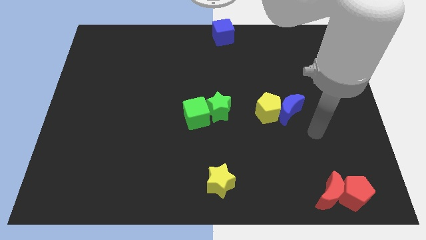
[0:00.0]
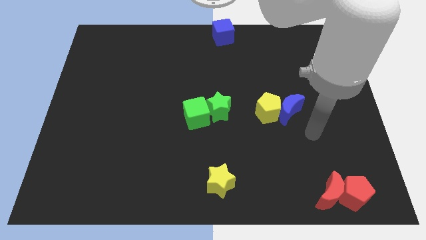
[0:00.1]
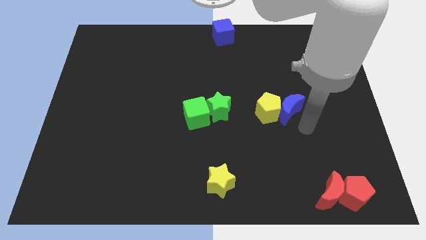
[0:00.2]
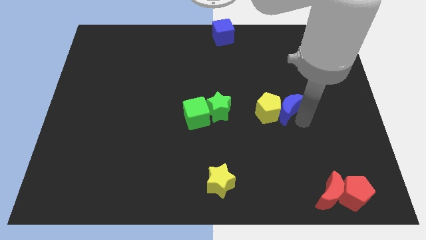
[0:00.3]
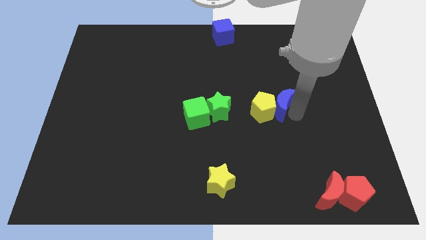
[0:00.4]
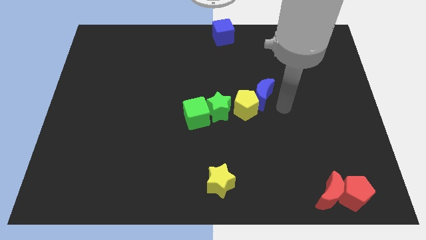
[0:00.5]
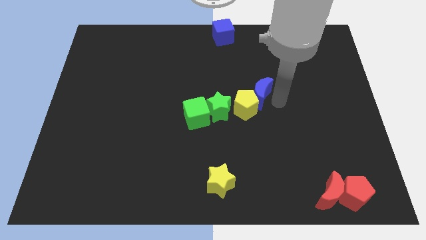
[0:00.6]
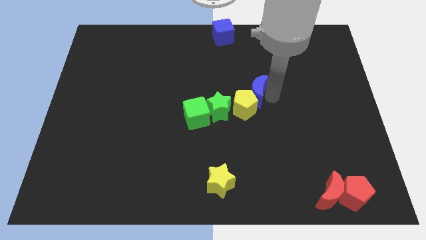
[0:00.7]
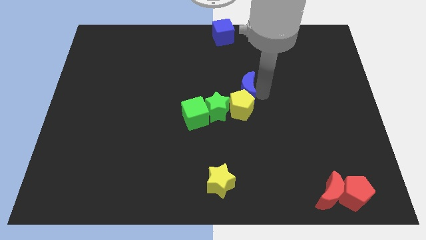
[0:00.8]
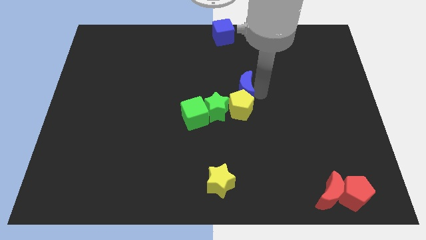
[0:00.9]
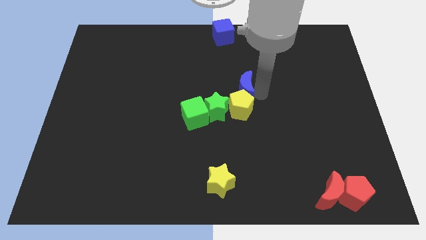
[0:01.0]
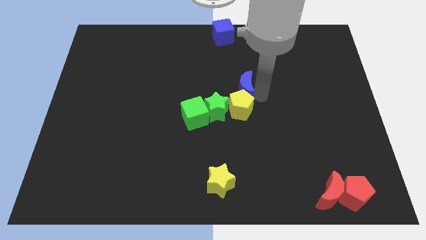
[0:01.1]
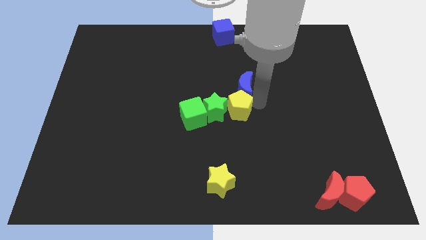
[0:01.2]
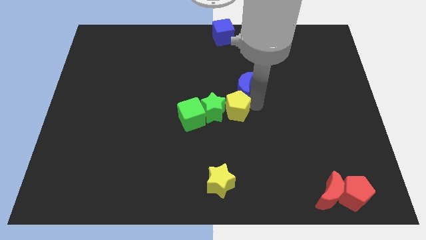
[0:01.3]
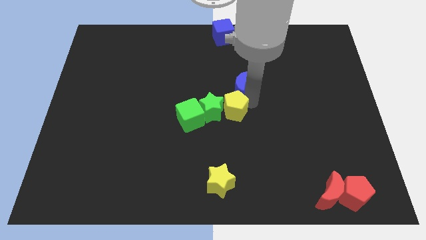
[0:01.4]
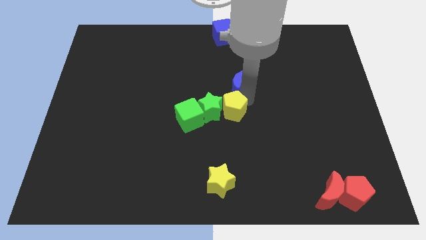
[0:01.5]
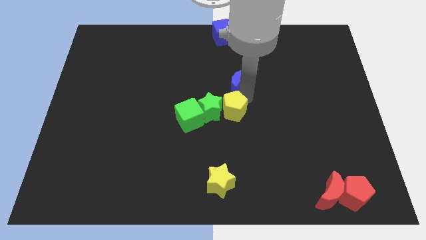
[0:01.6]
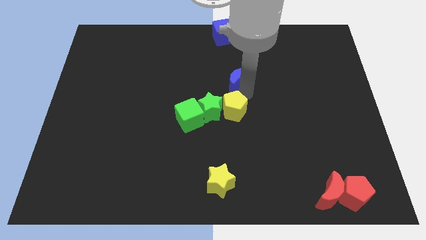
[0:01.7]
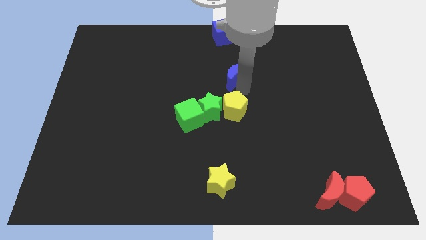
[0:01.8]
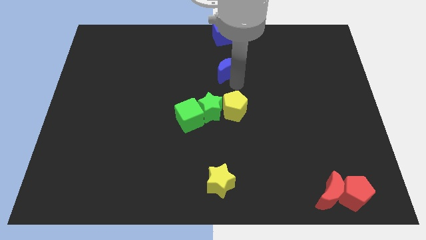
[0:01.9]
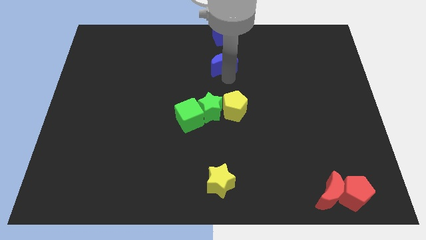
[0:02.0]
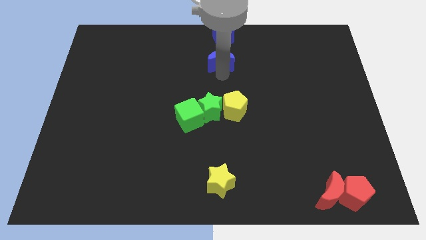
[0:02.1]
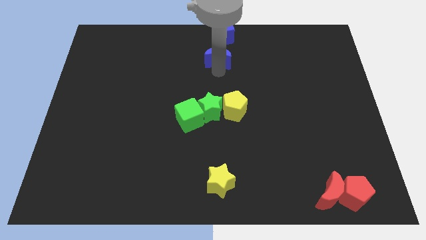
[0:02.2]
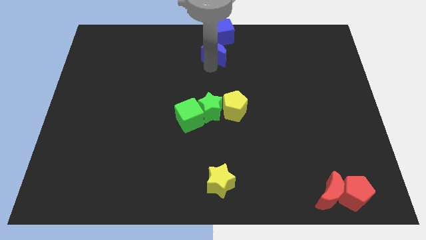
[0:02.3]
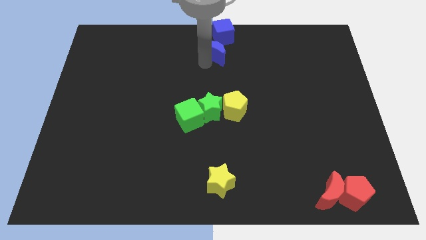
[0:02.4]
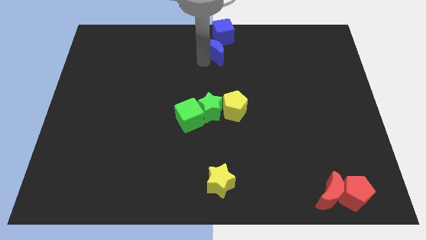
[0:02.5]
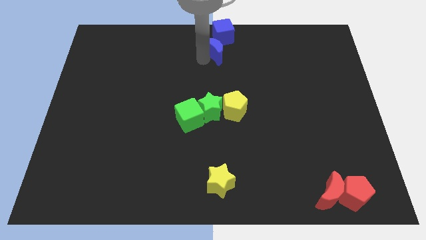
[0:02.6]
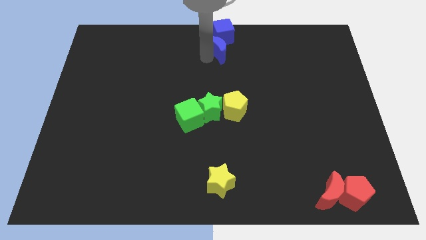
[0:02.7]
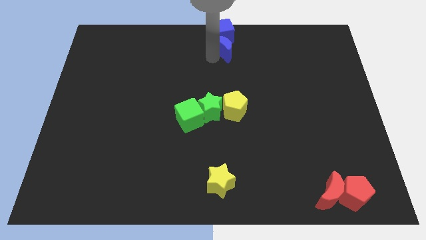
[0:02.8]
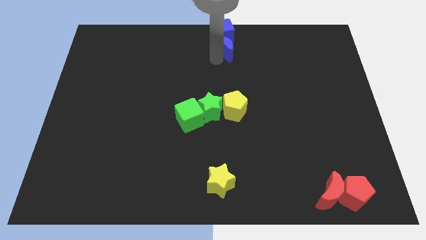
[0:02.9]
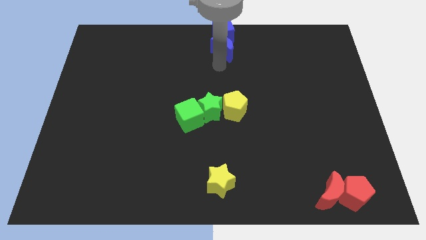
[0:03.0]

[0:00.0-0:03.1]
push the blue crescent to the bottom of the blue cube

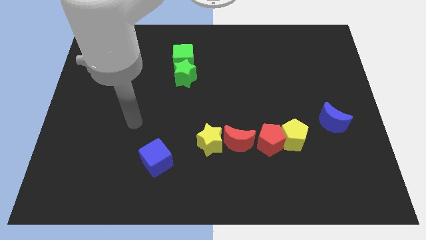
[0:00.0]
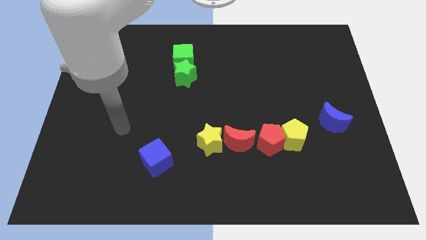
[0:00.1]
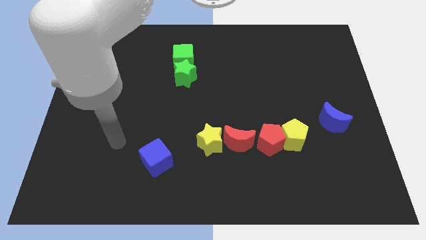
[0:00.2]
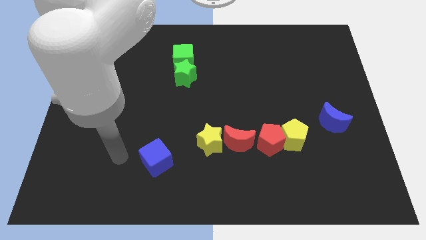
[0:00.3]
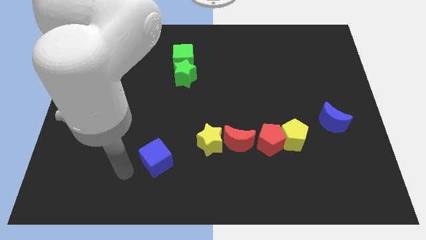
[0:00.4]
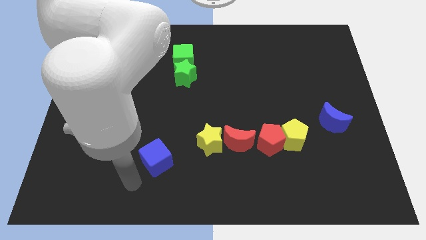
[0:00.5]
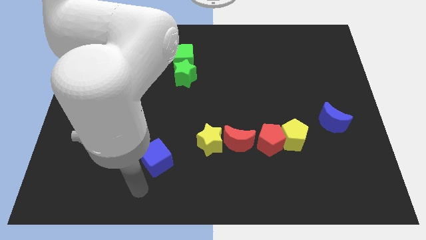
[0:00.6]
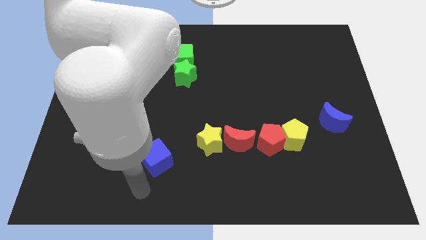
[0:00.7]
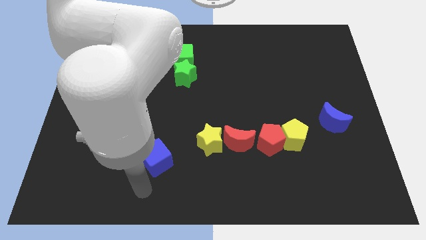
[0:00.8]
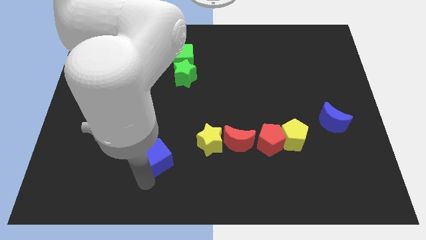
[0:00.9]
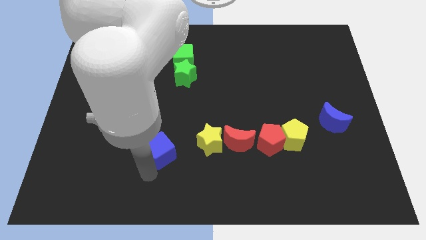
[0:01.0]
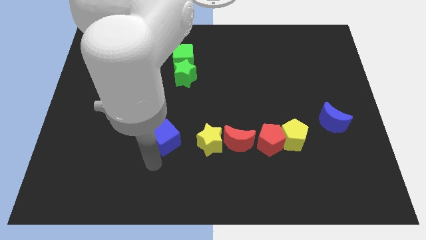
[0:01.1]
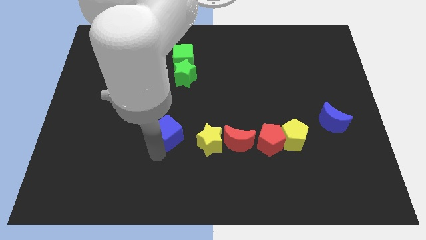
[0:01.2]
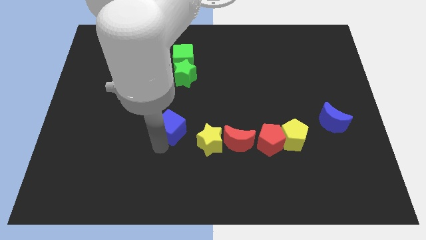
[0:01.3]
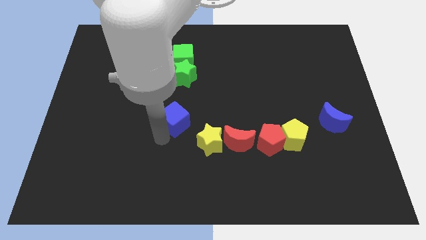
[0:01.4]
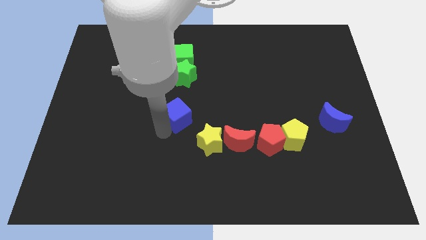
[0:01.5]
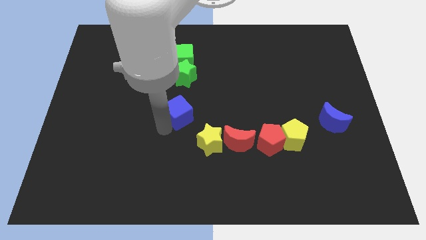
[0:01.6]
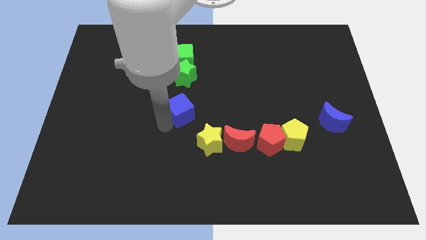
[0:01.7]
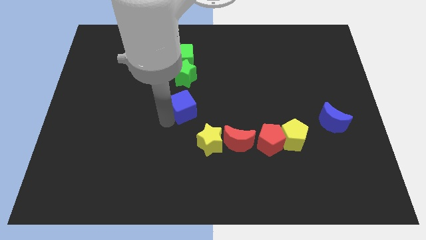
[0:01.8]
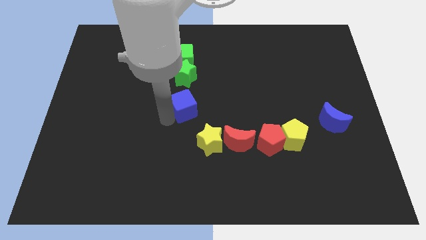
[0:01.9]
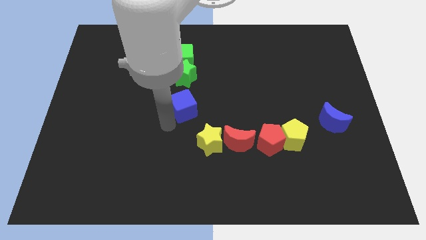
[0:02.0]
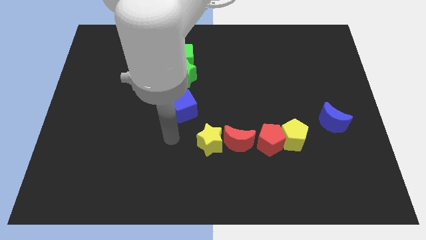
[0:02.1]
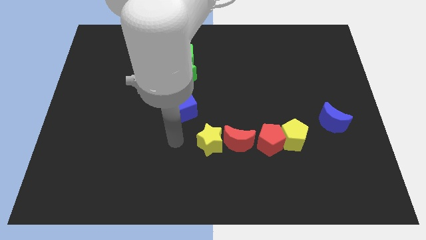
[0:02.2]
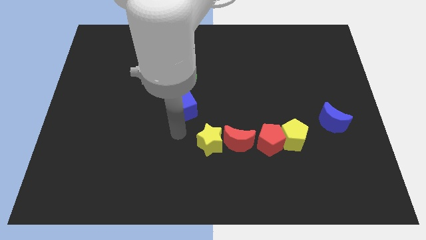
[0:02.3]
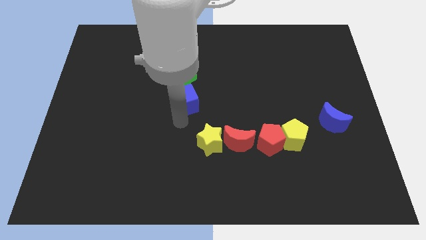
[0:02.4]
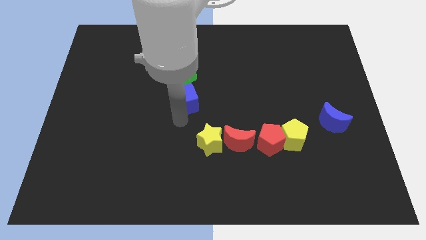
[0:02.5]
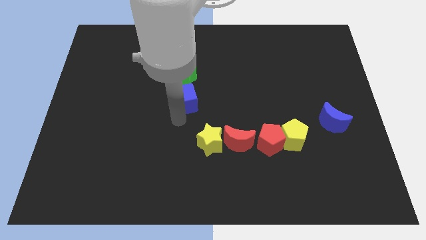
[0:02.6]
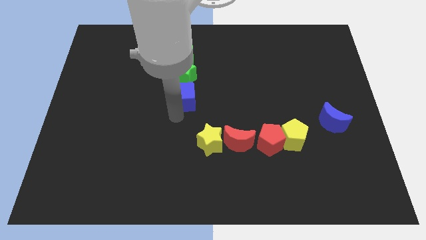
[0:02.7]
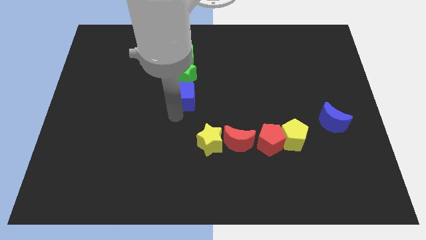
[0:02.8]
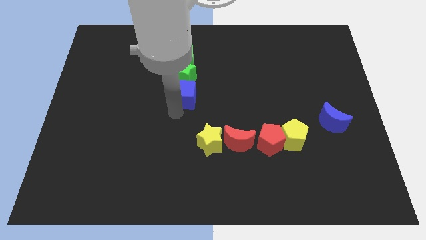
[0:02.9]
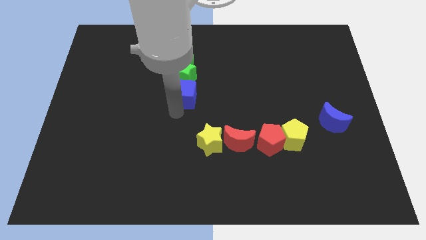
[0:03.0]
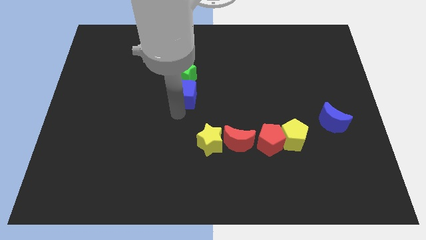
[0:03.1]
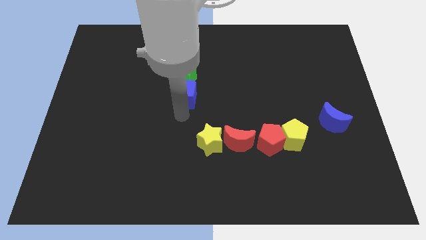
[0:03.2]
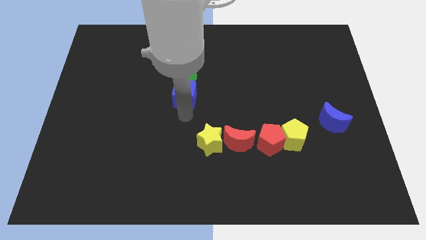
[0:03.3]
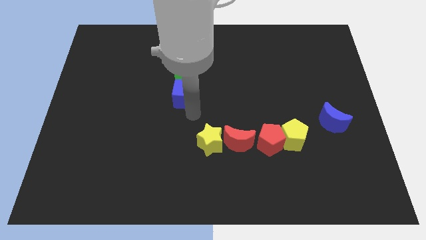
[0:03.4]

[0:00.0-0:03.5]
move the blue cube below to the green star

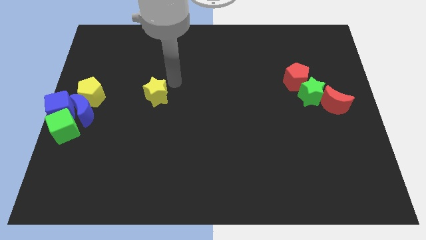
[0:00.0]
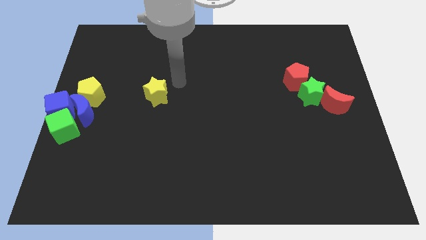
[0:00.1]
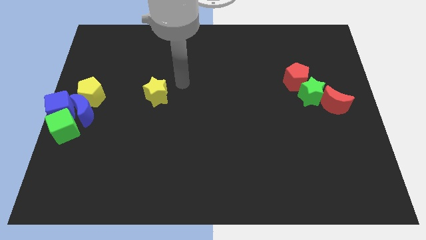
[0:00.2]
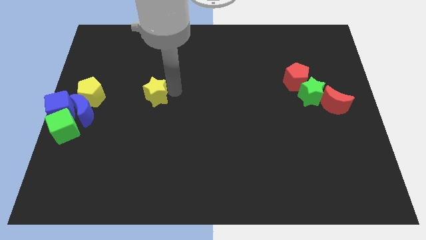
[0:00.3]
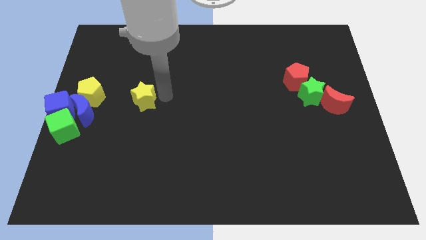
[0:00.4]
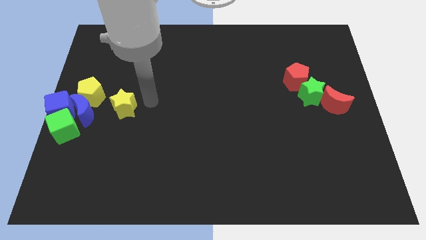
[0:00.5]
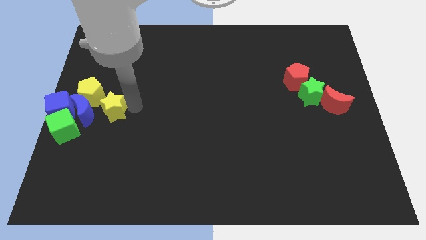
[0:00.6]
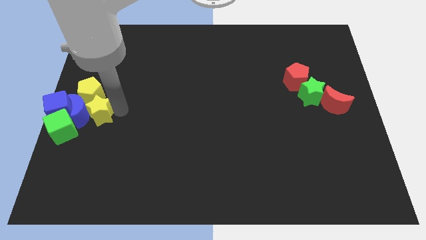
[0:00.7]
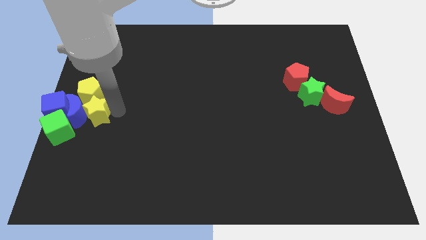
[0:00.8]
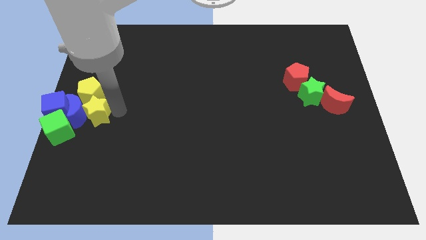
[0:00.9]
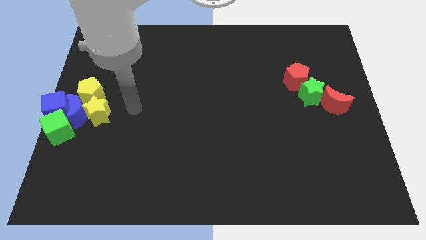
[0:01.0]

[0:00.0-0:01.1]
slide yellow star into blue moon

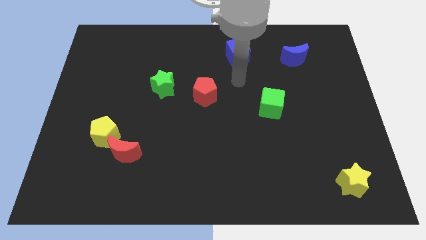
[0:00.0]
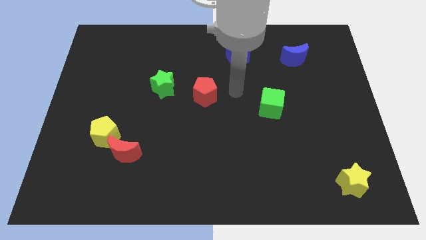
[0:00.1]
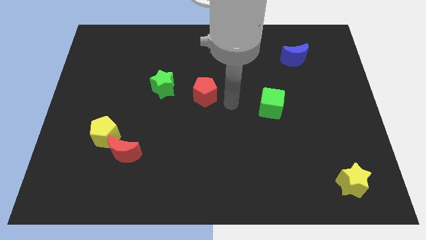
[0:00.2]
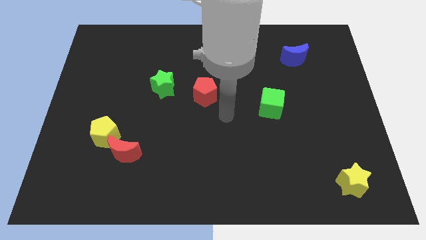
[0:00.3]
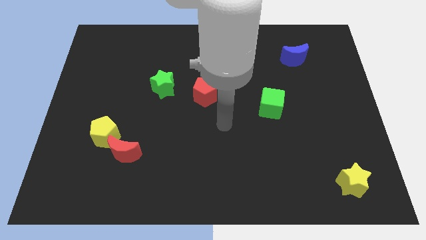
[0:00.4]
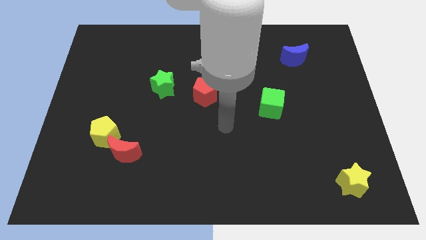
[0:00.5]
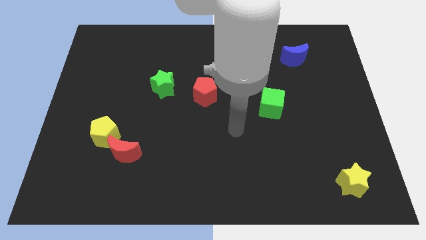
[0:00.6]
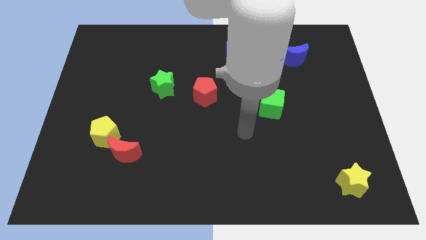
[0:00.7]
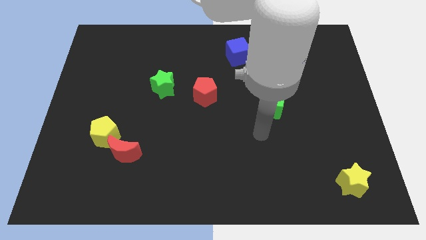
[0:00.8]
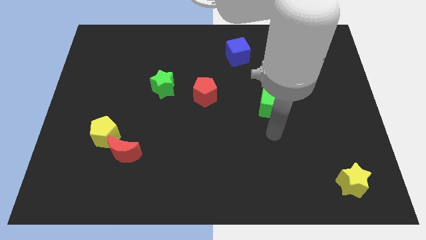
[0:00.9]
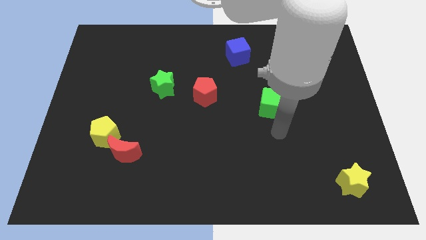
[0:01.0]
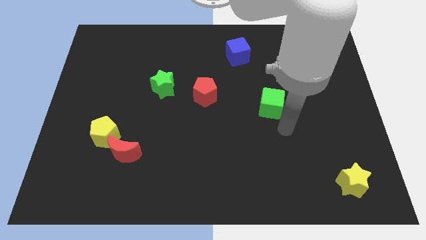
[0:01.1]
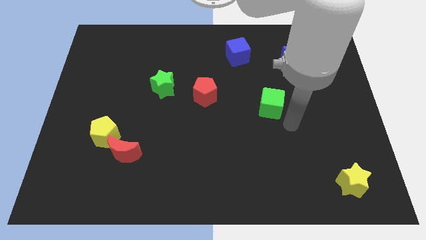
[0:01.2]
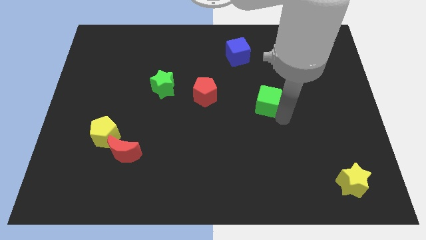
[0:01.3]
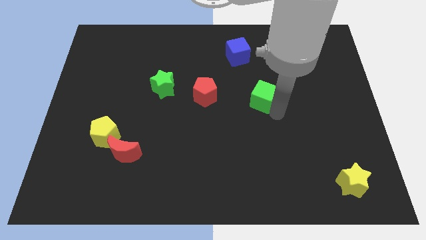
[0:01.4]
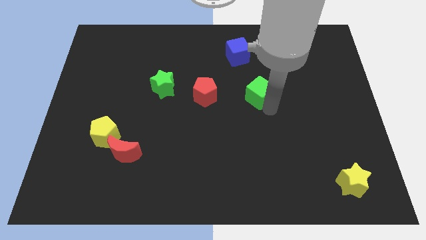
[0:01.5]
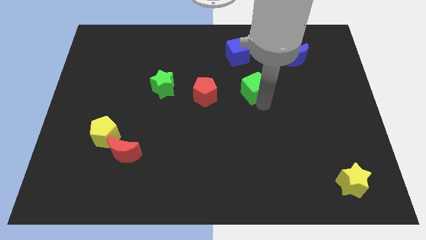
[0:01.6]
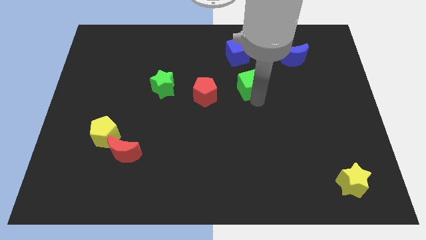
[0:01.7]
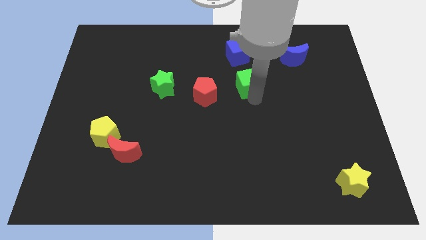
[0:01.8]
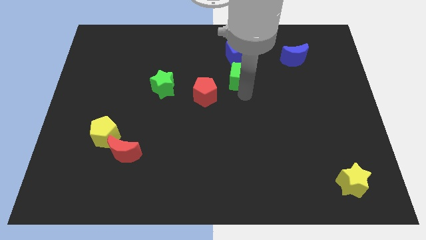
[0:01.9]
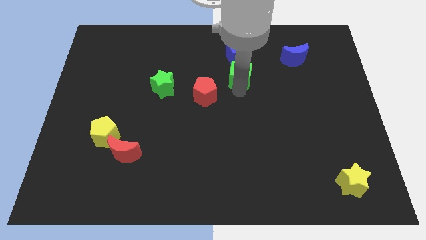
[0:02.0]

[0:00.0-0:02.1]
push the green cube towards the blue cube
